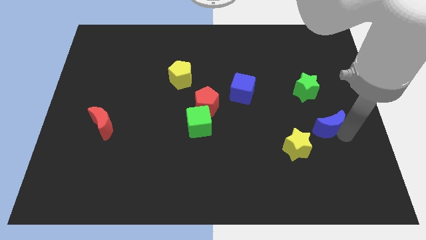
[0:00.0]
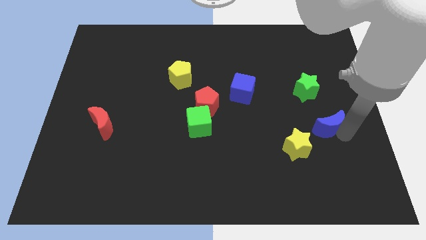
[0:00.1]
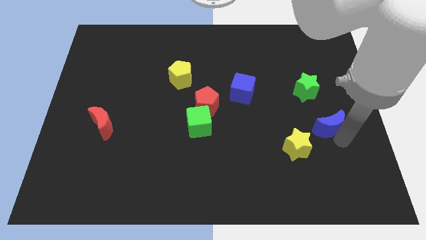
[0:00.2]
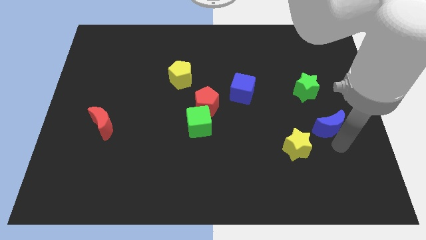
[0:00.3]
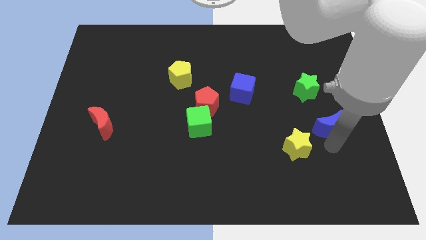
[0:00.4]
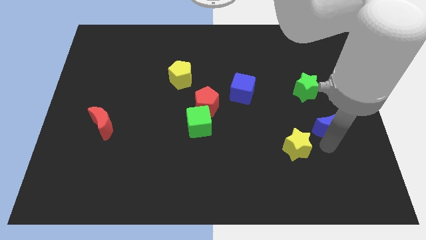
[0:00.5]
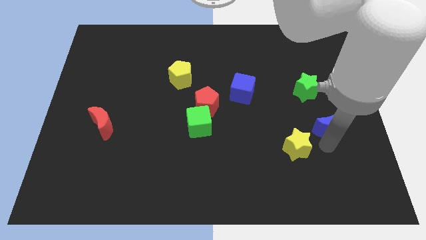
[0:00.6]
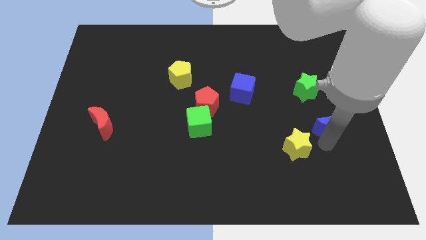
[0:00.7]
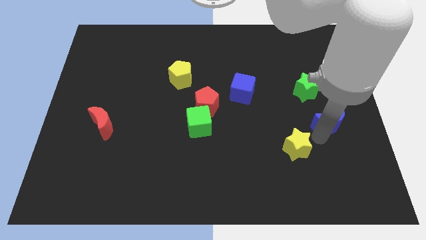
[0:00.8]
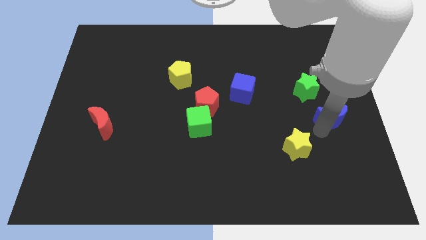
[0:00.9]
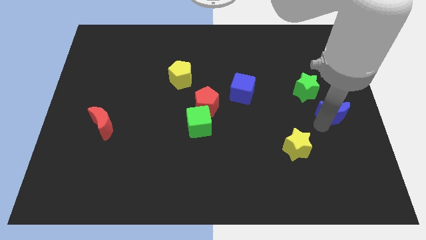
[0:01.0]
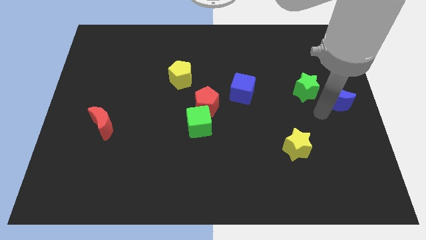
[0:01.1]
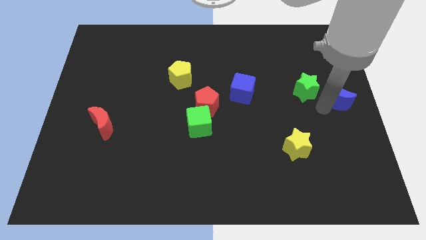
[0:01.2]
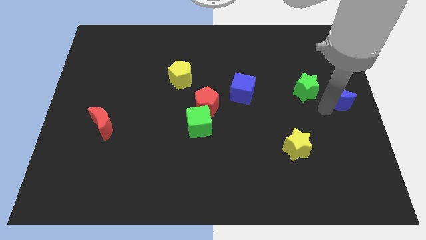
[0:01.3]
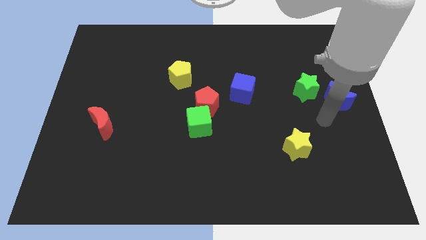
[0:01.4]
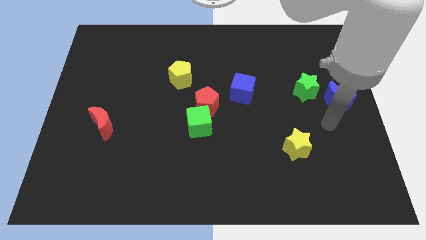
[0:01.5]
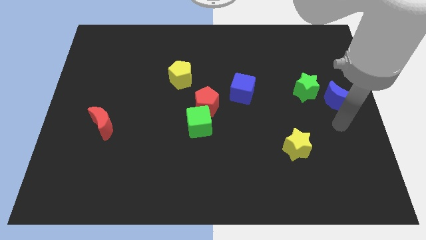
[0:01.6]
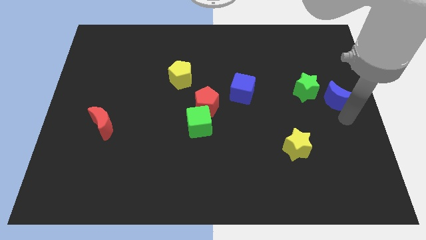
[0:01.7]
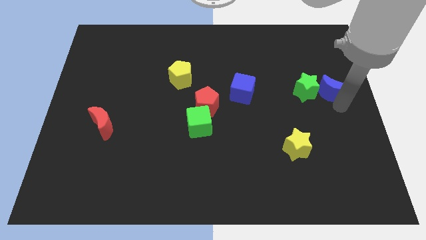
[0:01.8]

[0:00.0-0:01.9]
place the blue moon to the right of the green star

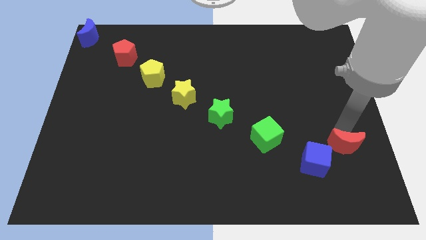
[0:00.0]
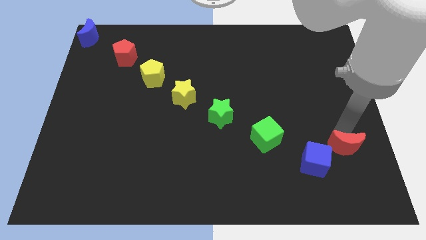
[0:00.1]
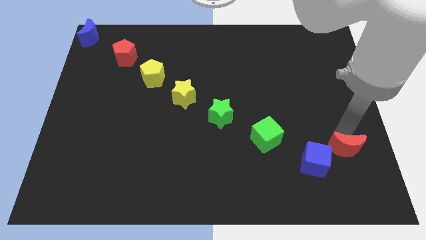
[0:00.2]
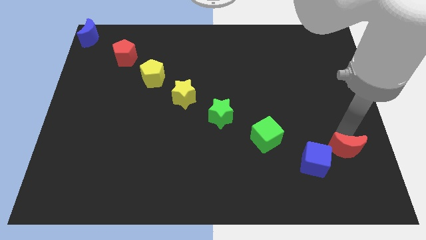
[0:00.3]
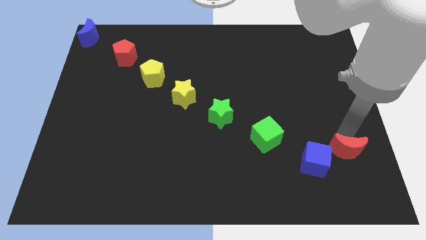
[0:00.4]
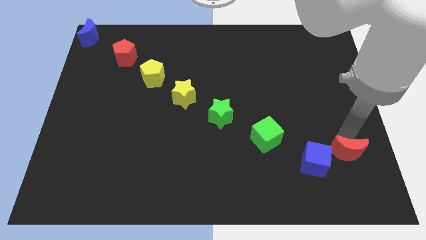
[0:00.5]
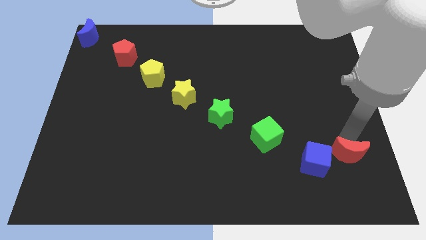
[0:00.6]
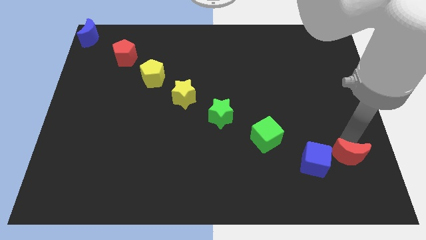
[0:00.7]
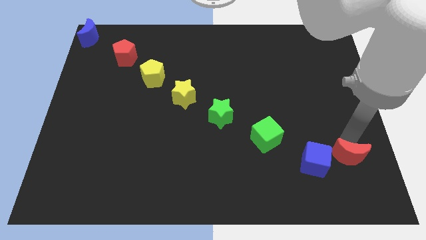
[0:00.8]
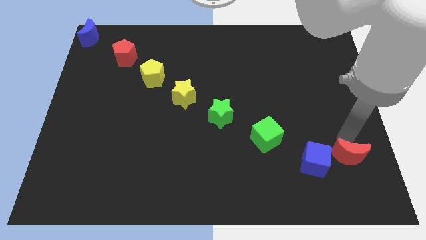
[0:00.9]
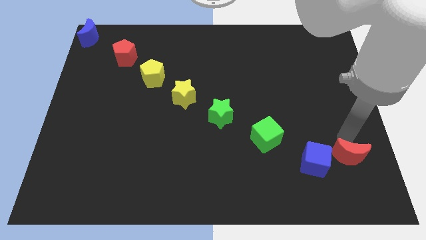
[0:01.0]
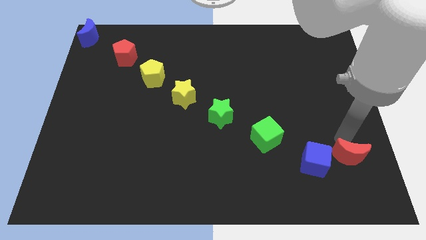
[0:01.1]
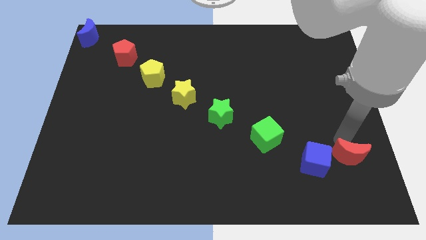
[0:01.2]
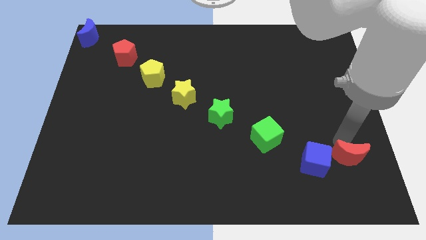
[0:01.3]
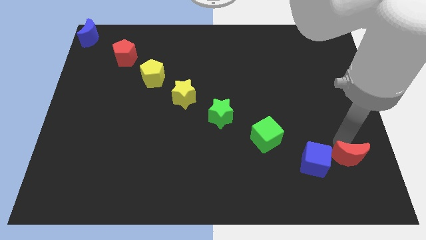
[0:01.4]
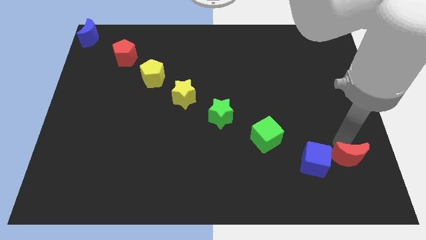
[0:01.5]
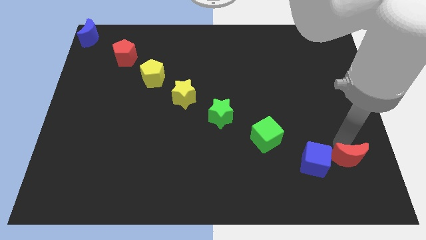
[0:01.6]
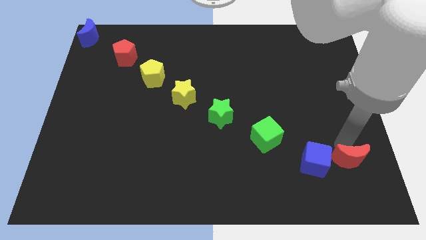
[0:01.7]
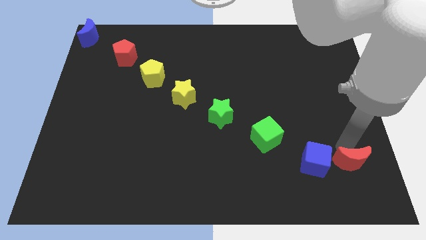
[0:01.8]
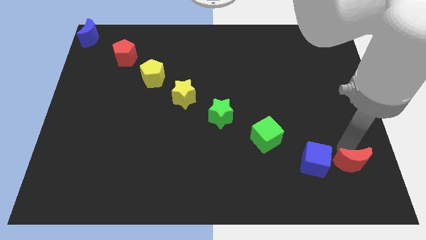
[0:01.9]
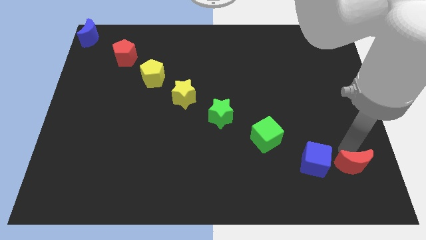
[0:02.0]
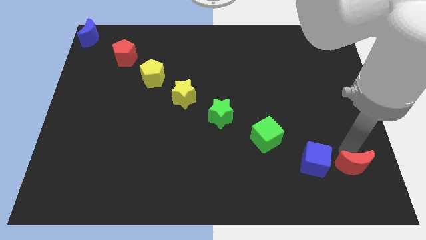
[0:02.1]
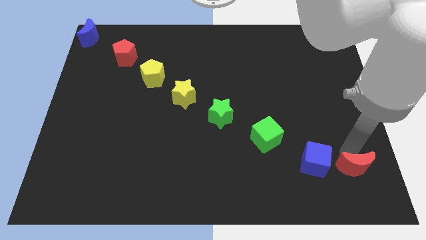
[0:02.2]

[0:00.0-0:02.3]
move the red crescent vertical to the blue cube

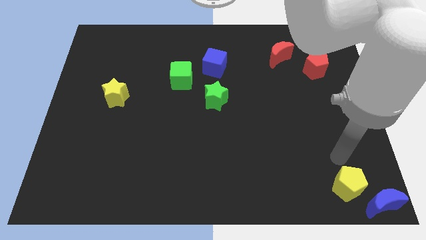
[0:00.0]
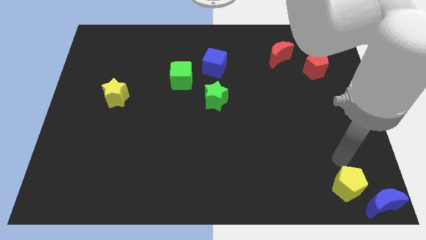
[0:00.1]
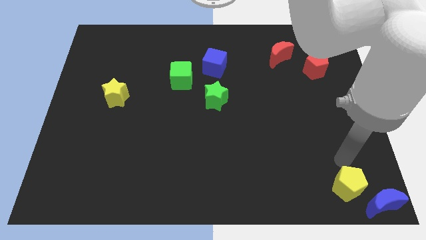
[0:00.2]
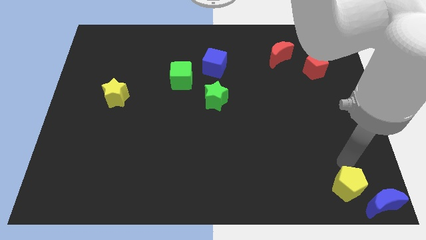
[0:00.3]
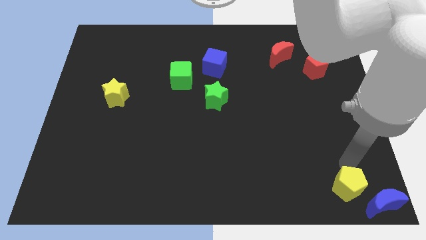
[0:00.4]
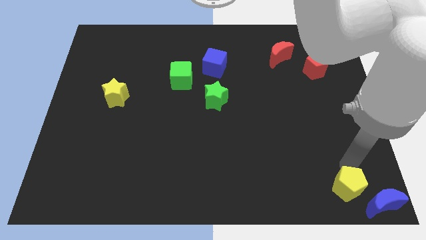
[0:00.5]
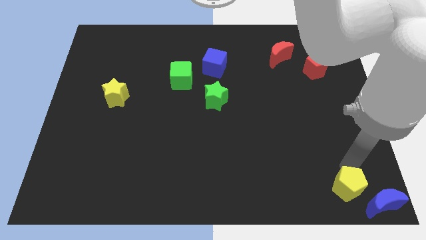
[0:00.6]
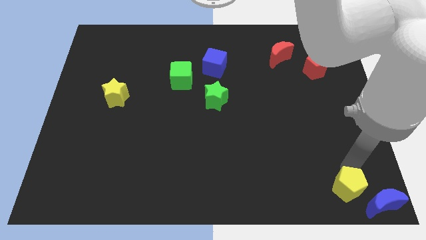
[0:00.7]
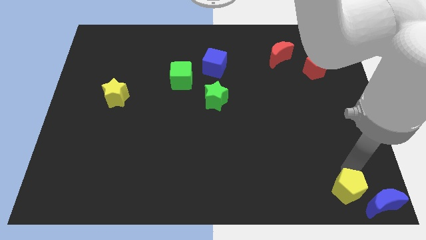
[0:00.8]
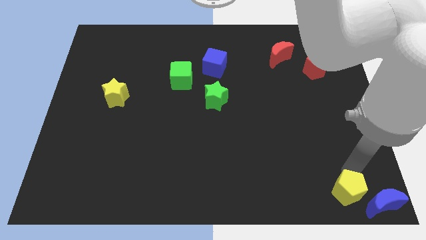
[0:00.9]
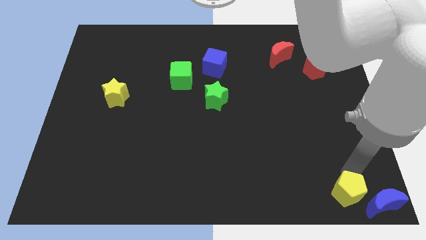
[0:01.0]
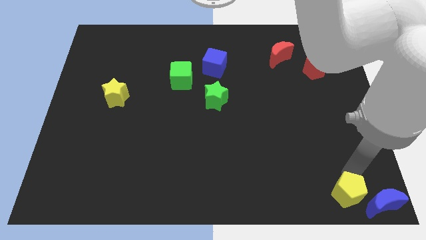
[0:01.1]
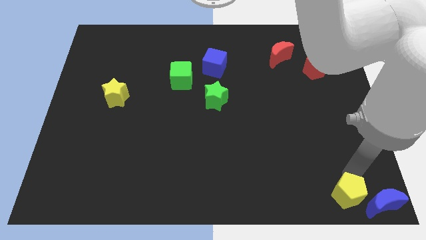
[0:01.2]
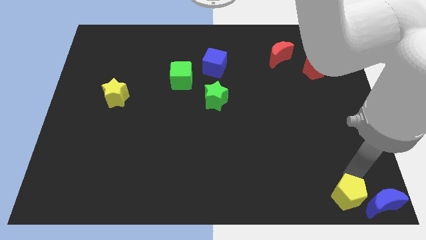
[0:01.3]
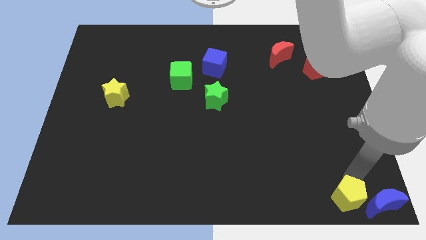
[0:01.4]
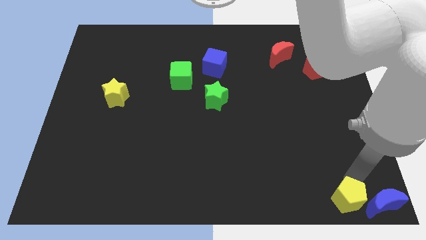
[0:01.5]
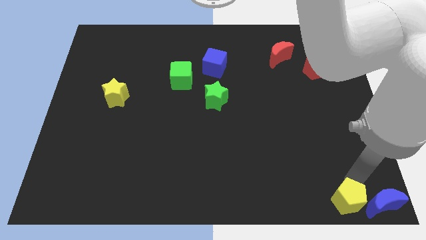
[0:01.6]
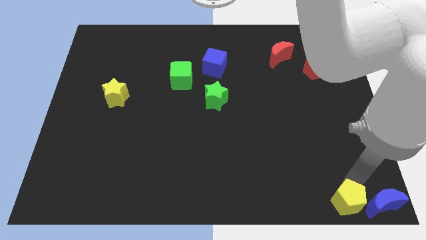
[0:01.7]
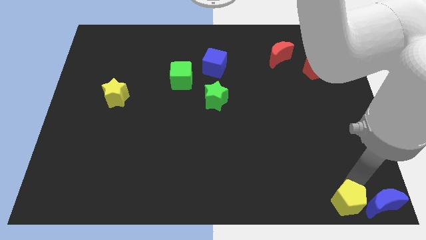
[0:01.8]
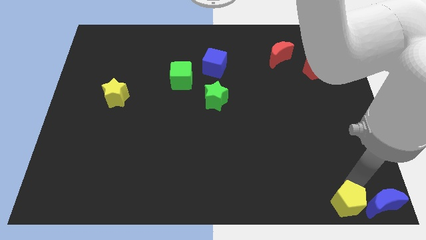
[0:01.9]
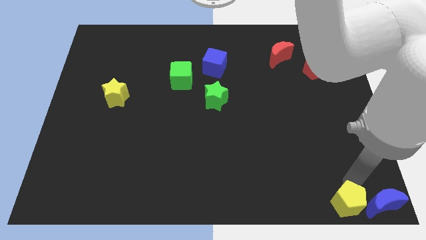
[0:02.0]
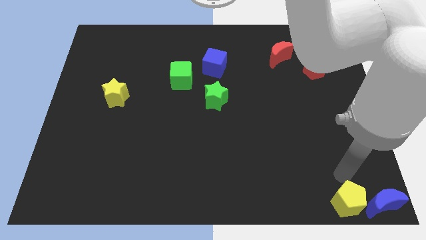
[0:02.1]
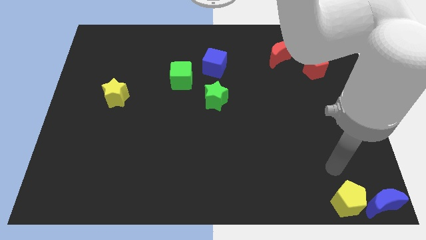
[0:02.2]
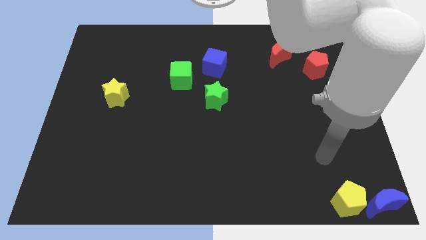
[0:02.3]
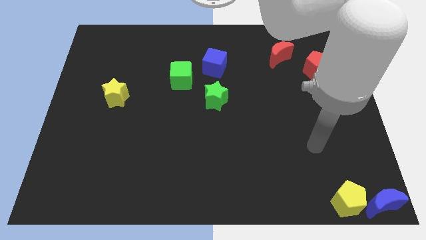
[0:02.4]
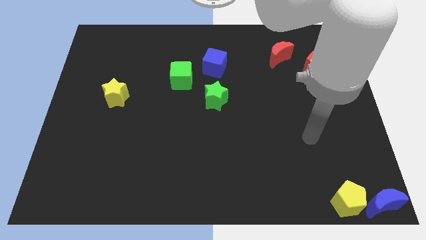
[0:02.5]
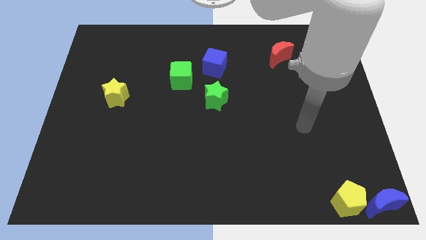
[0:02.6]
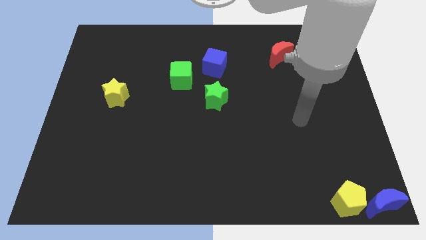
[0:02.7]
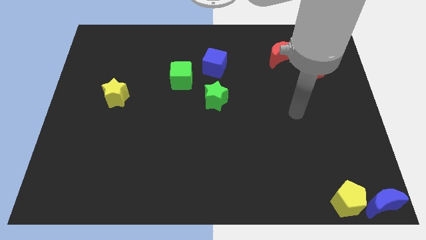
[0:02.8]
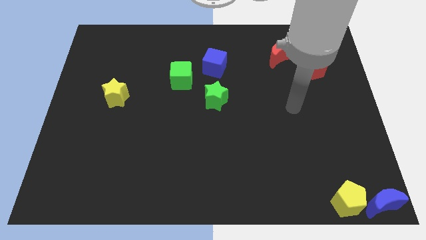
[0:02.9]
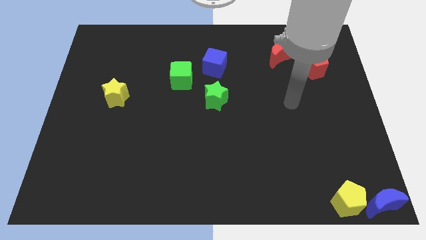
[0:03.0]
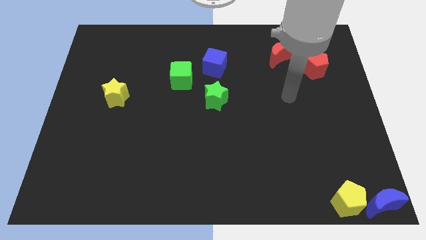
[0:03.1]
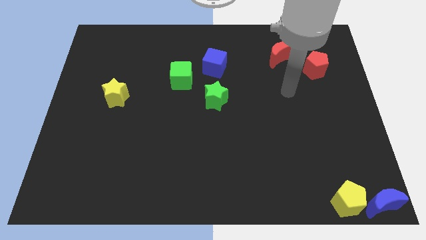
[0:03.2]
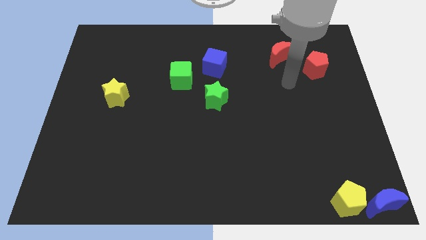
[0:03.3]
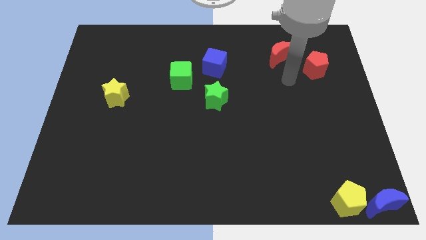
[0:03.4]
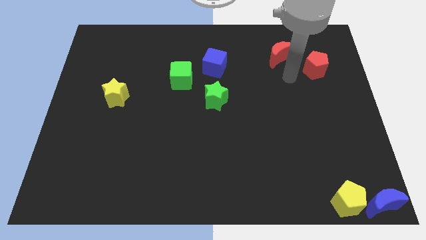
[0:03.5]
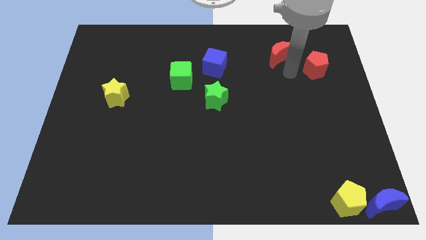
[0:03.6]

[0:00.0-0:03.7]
put the yellow pentagon to the left side of the blue moon

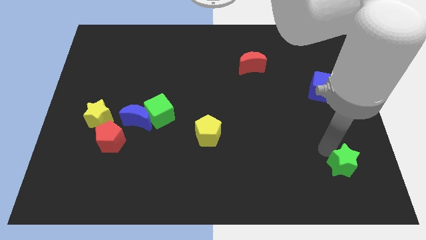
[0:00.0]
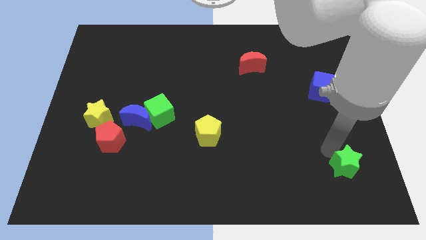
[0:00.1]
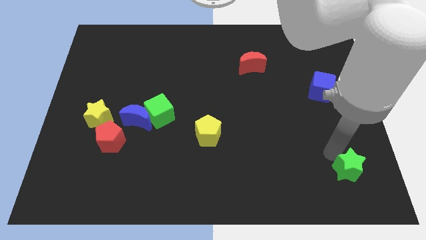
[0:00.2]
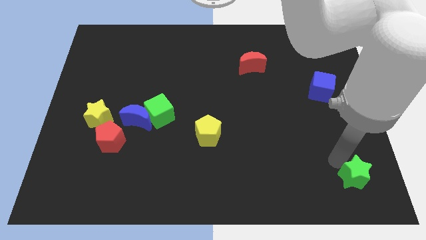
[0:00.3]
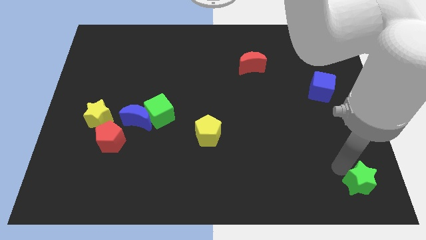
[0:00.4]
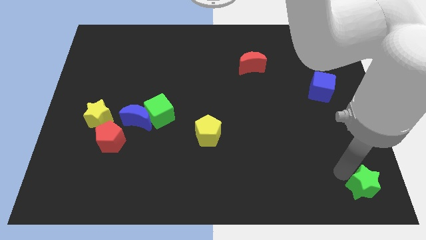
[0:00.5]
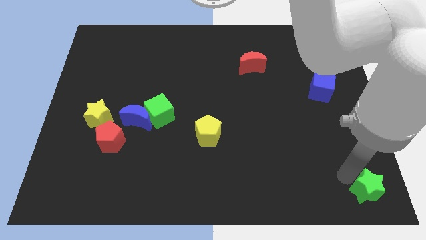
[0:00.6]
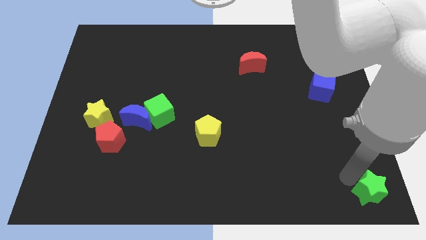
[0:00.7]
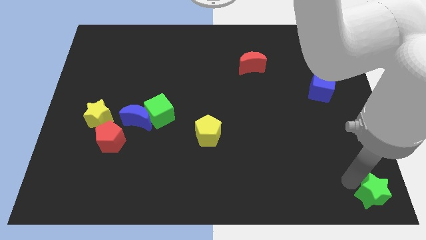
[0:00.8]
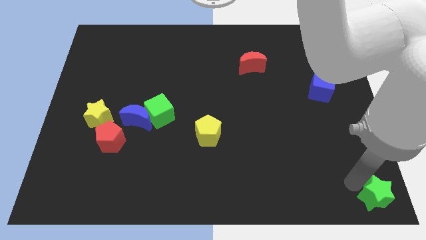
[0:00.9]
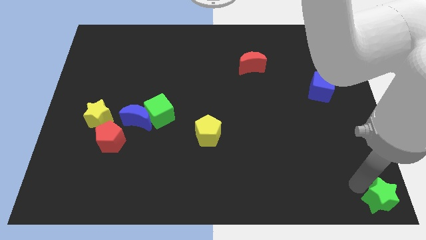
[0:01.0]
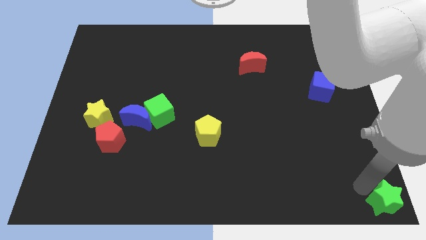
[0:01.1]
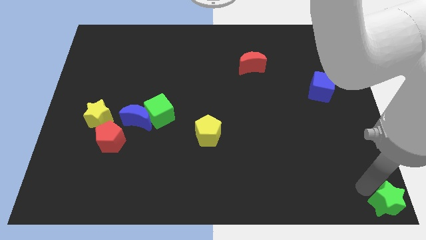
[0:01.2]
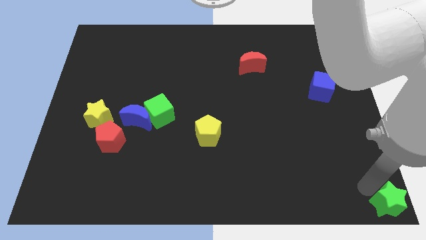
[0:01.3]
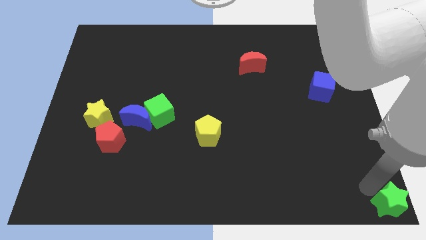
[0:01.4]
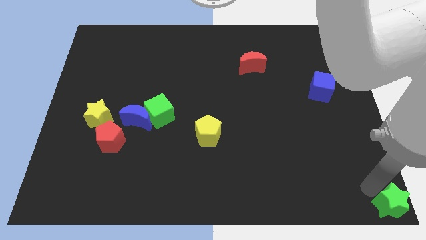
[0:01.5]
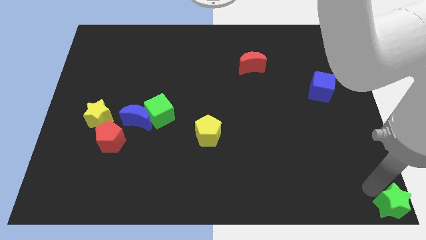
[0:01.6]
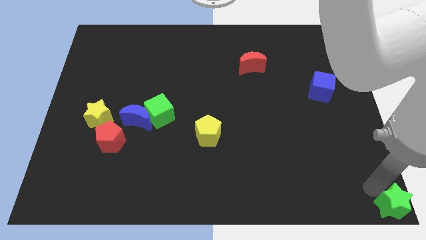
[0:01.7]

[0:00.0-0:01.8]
push the green star to the bottom right corner of the board
